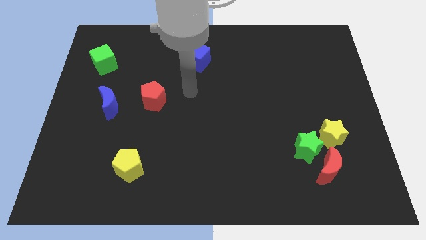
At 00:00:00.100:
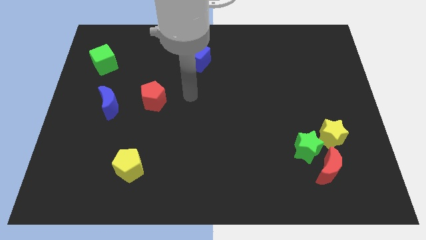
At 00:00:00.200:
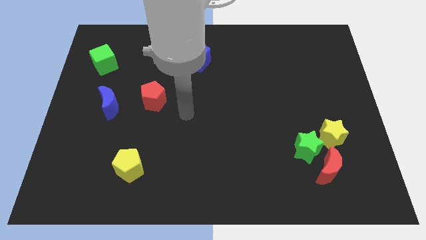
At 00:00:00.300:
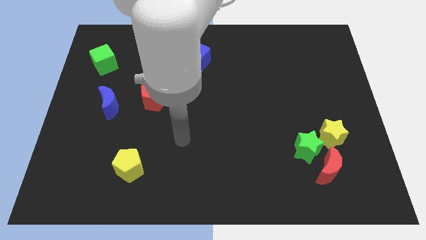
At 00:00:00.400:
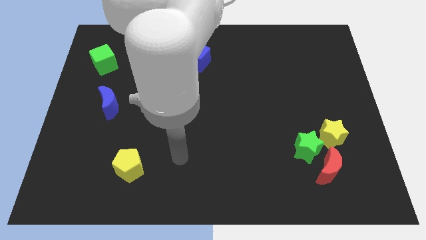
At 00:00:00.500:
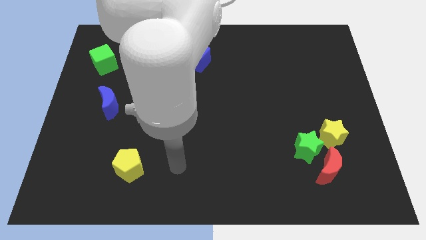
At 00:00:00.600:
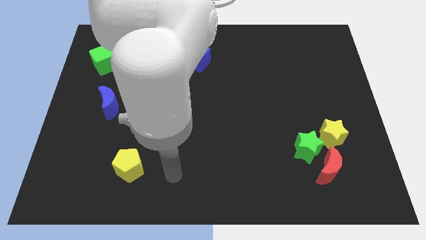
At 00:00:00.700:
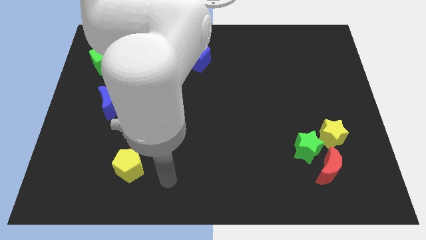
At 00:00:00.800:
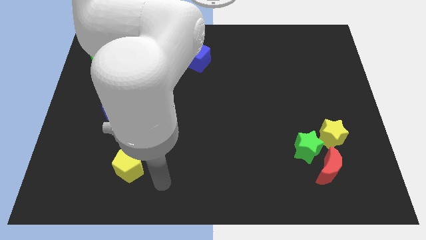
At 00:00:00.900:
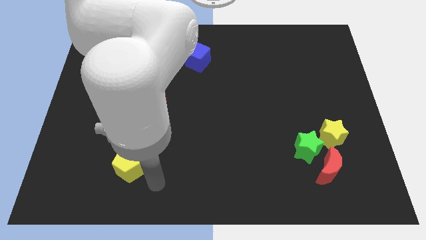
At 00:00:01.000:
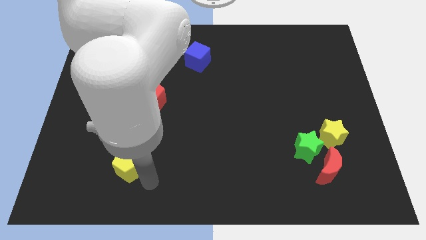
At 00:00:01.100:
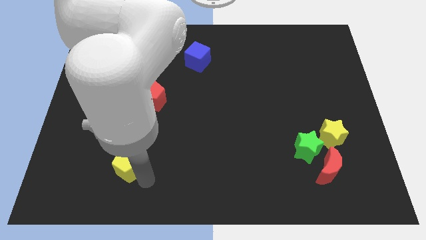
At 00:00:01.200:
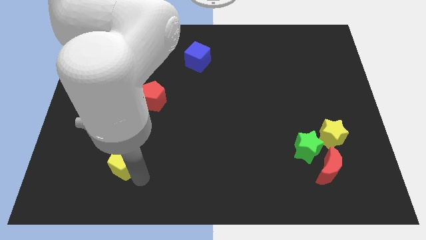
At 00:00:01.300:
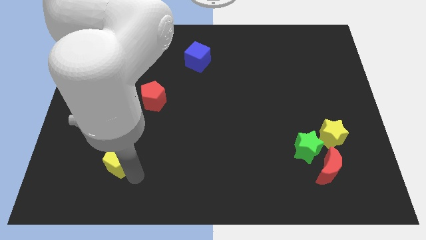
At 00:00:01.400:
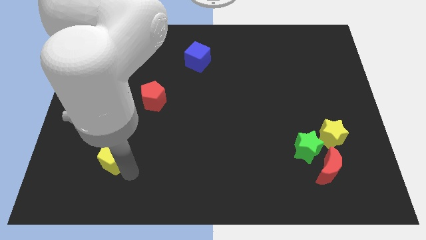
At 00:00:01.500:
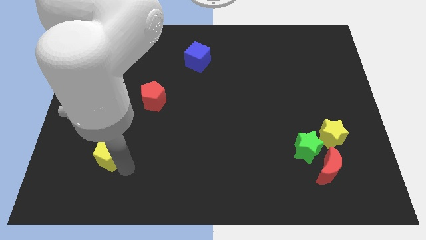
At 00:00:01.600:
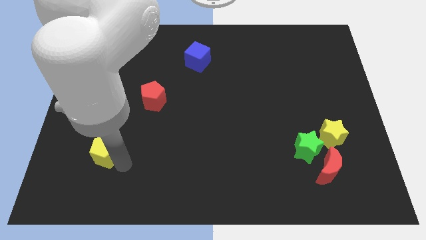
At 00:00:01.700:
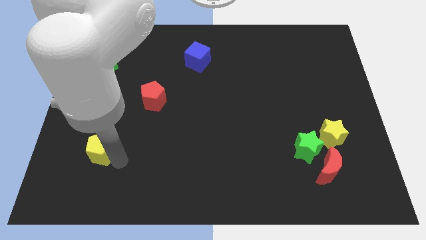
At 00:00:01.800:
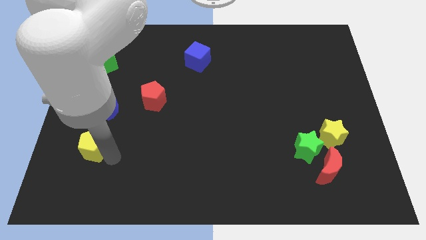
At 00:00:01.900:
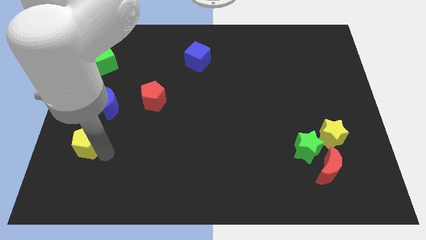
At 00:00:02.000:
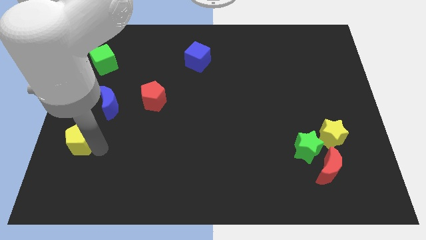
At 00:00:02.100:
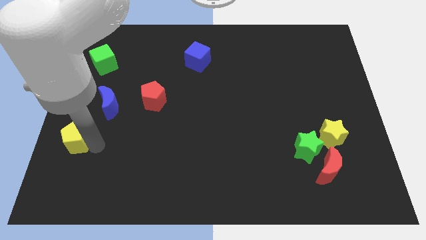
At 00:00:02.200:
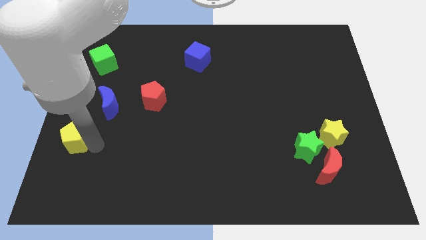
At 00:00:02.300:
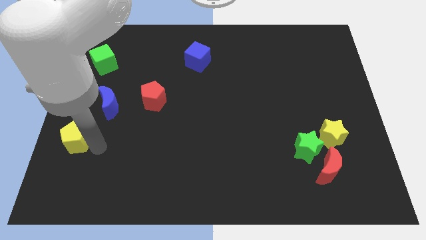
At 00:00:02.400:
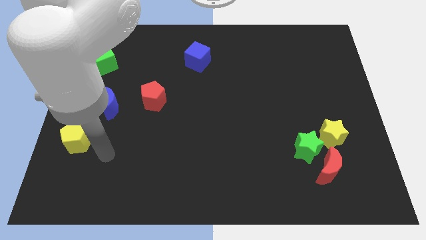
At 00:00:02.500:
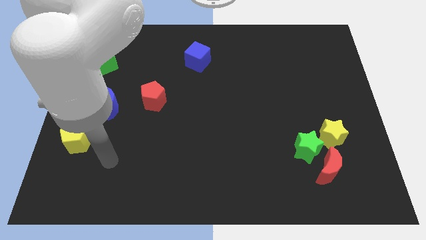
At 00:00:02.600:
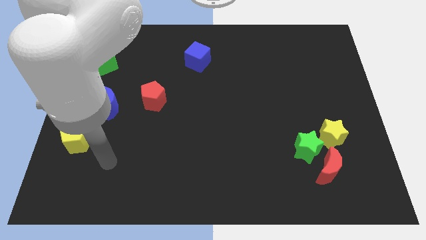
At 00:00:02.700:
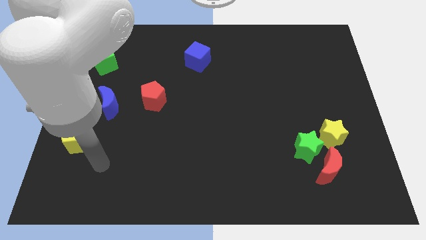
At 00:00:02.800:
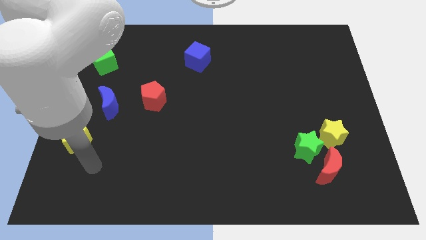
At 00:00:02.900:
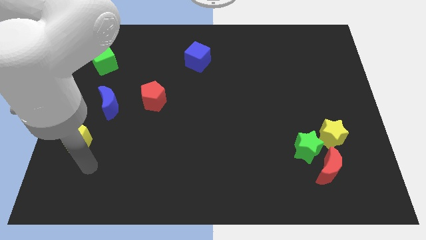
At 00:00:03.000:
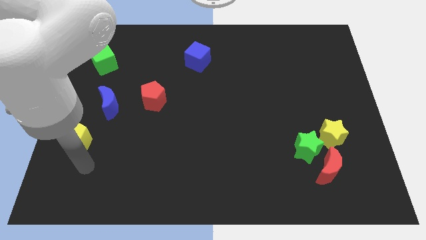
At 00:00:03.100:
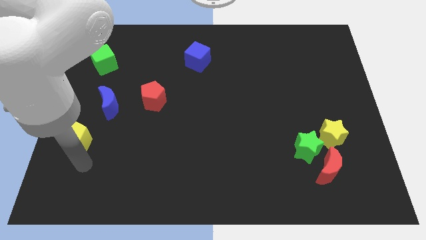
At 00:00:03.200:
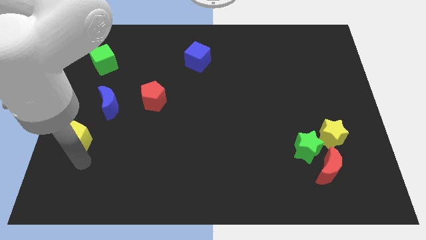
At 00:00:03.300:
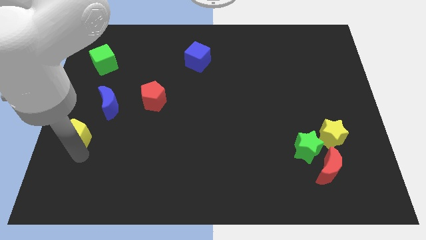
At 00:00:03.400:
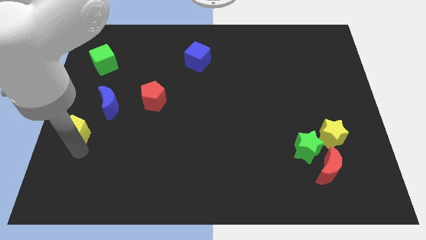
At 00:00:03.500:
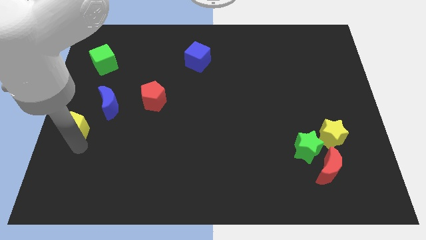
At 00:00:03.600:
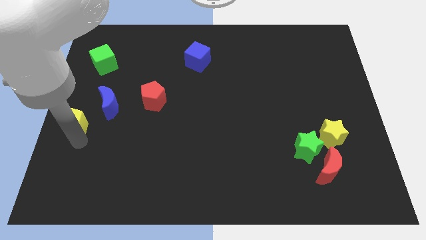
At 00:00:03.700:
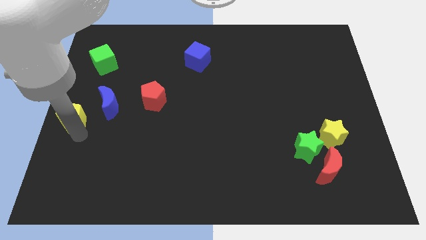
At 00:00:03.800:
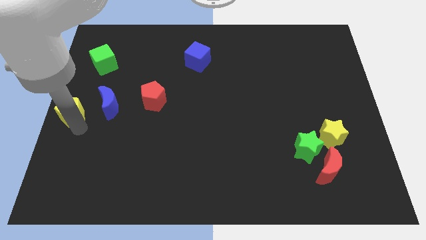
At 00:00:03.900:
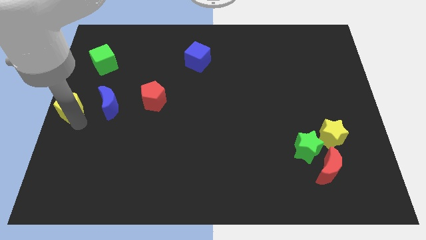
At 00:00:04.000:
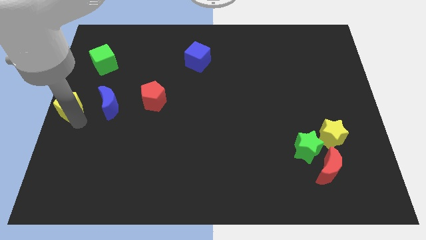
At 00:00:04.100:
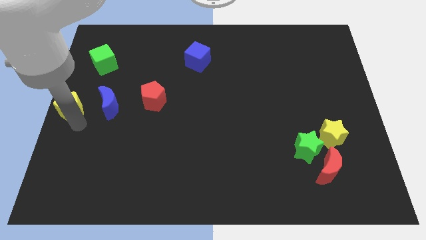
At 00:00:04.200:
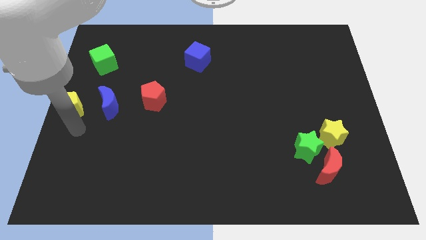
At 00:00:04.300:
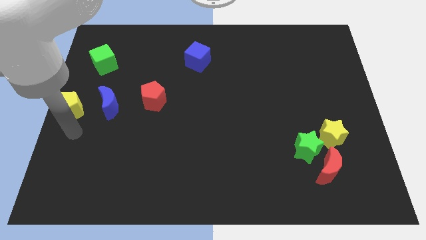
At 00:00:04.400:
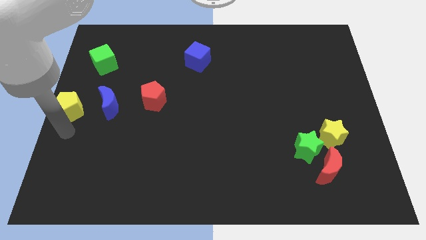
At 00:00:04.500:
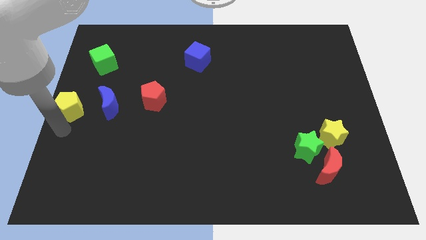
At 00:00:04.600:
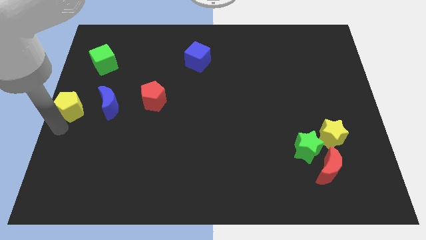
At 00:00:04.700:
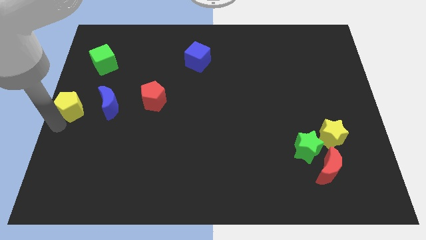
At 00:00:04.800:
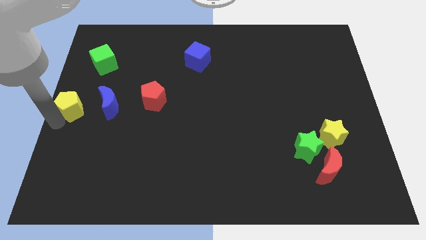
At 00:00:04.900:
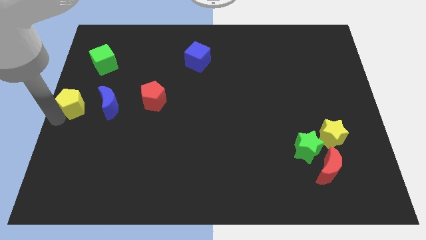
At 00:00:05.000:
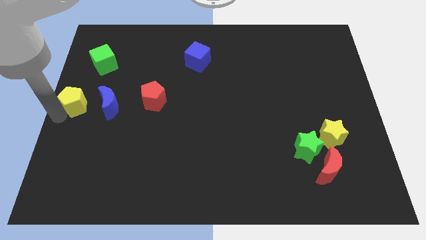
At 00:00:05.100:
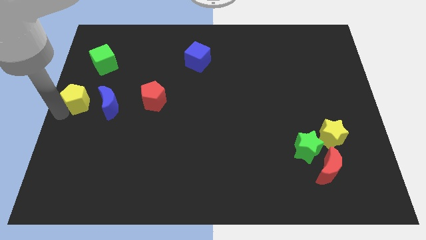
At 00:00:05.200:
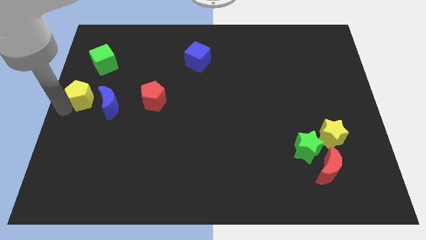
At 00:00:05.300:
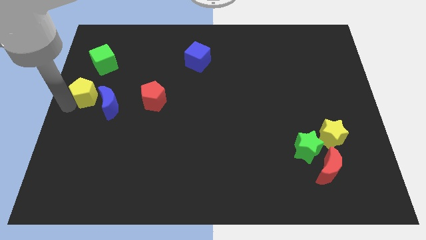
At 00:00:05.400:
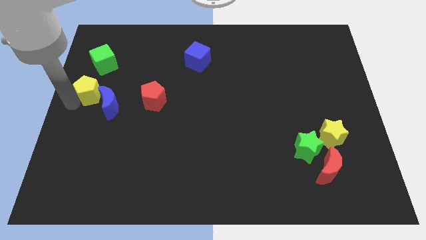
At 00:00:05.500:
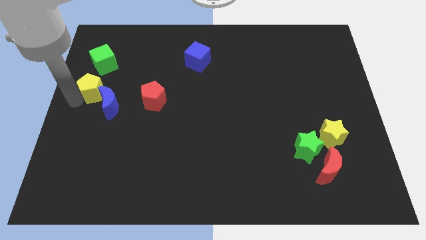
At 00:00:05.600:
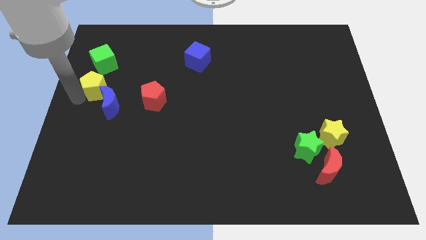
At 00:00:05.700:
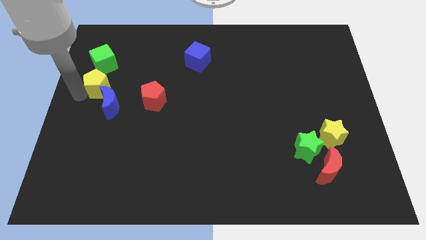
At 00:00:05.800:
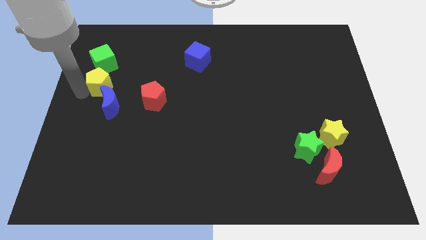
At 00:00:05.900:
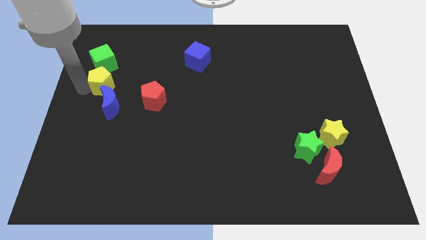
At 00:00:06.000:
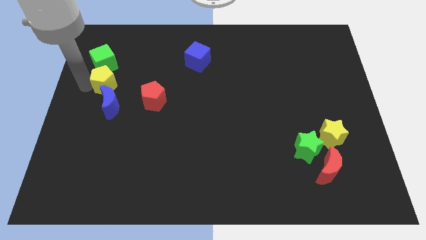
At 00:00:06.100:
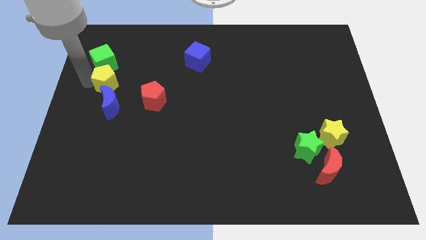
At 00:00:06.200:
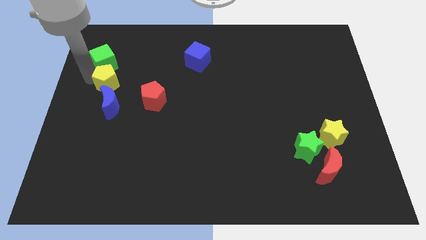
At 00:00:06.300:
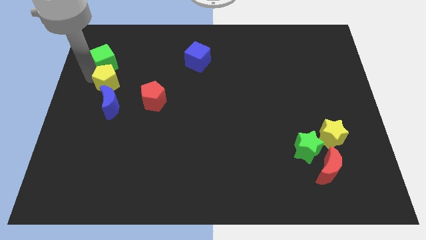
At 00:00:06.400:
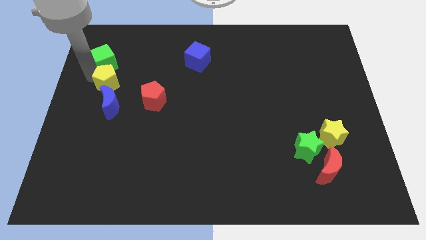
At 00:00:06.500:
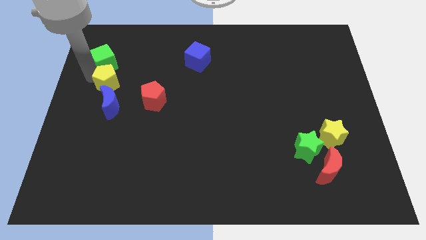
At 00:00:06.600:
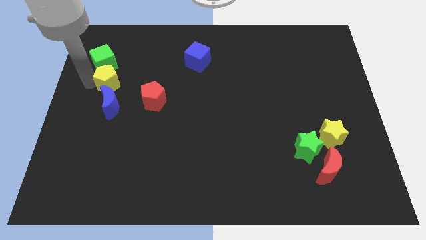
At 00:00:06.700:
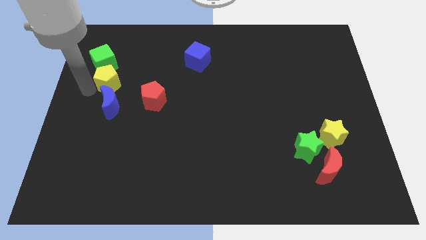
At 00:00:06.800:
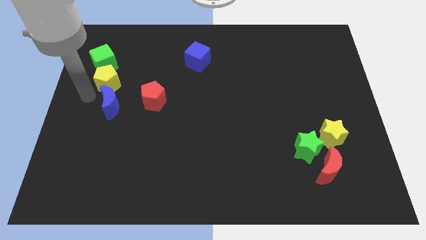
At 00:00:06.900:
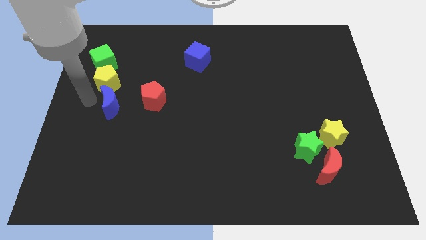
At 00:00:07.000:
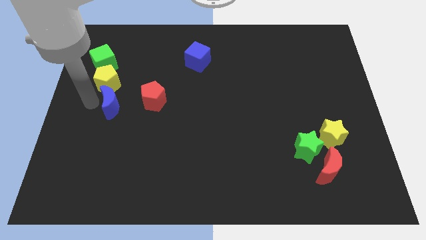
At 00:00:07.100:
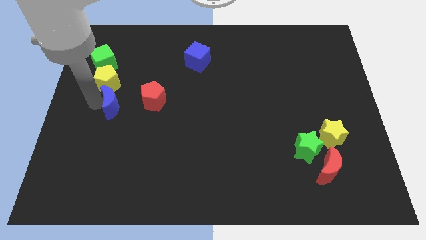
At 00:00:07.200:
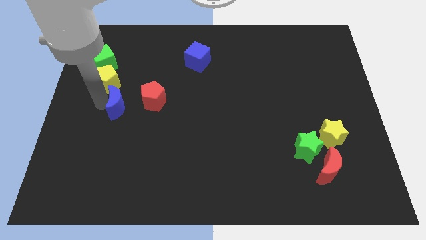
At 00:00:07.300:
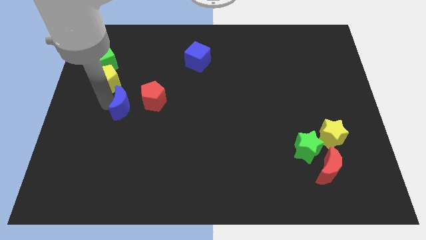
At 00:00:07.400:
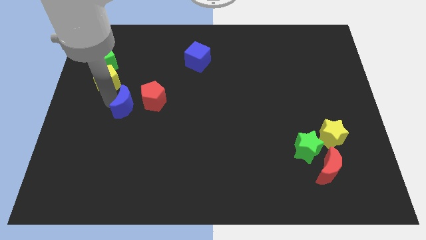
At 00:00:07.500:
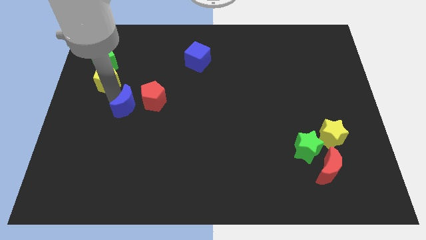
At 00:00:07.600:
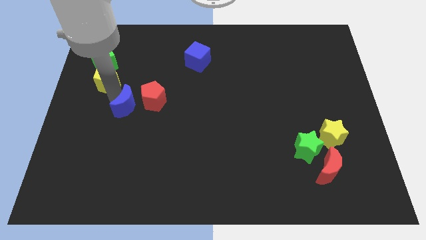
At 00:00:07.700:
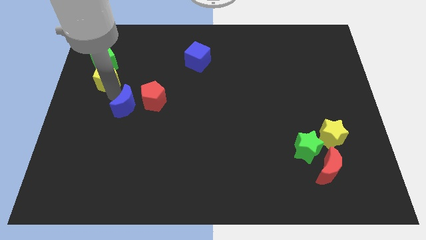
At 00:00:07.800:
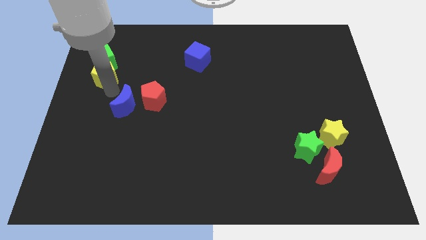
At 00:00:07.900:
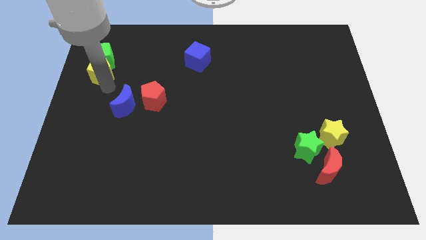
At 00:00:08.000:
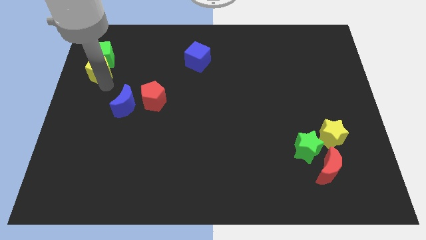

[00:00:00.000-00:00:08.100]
push the yellow pentagon next to the green cube
